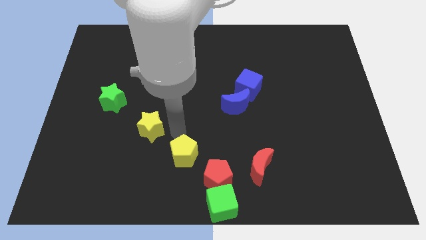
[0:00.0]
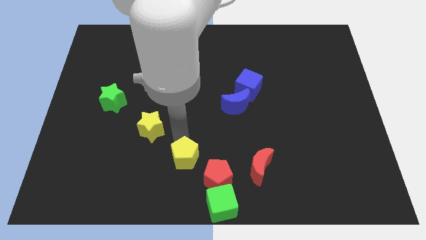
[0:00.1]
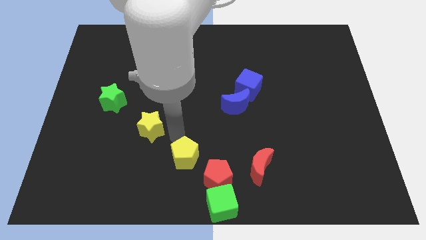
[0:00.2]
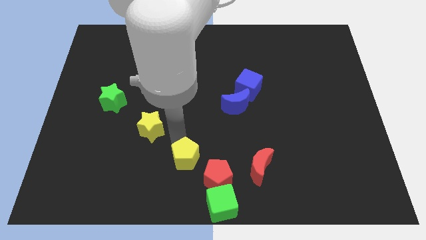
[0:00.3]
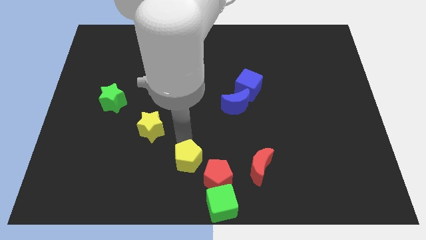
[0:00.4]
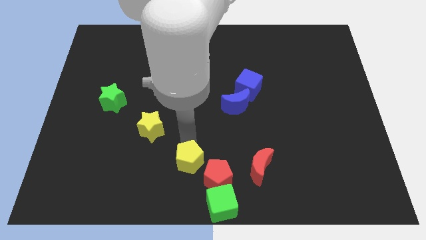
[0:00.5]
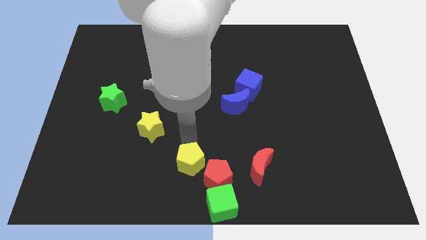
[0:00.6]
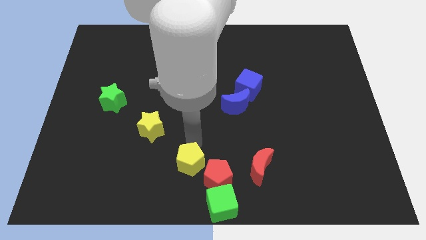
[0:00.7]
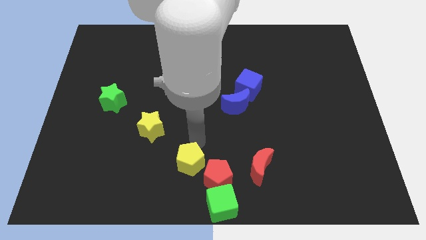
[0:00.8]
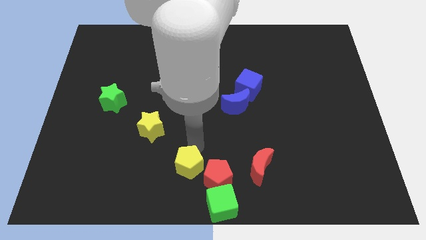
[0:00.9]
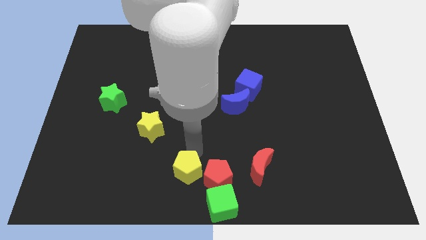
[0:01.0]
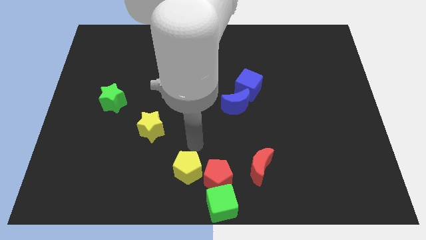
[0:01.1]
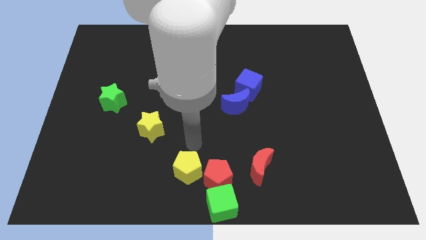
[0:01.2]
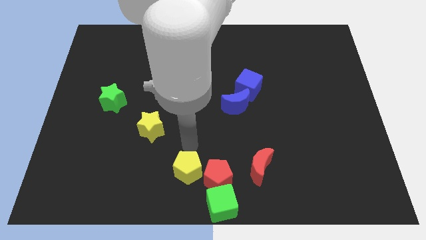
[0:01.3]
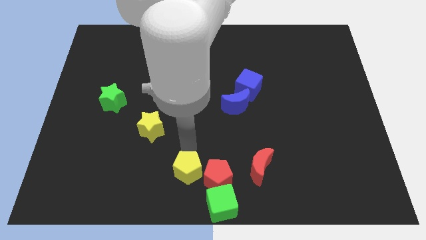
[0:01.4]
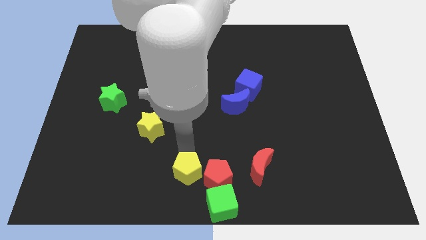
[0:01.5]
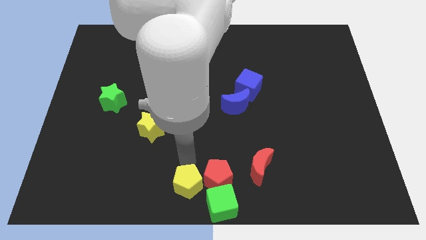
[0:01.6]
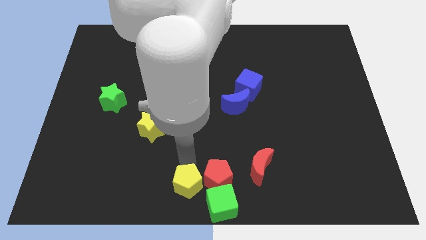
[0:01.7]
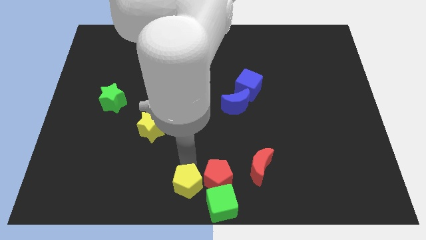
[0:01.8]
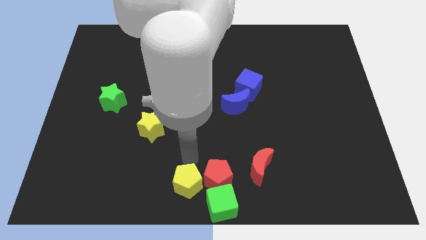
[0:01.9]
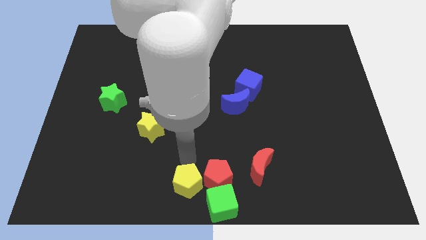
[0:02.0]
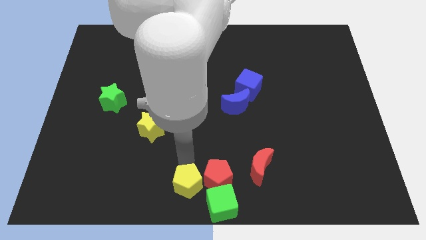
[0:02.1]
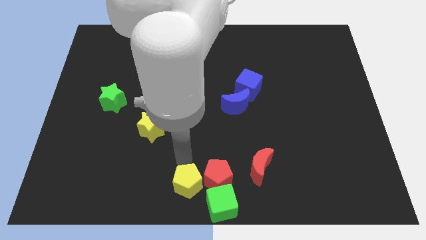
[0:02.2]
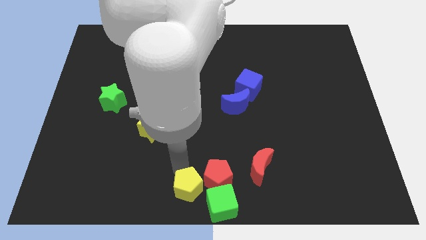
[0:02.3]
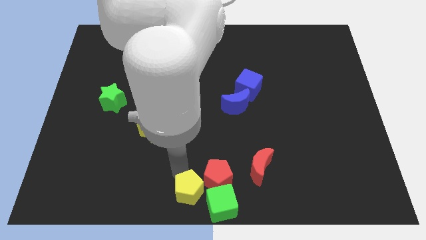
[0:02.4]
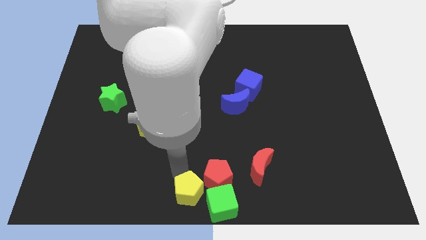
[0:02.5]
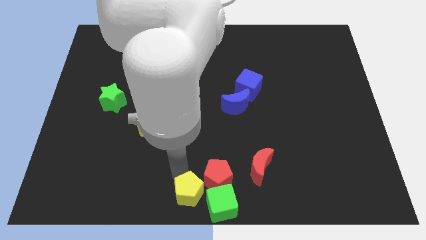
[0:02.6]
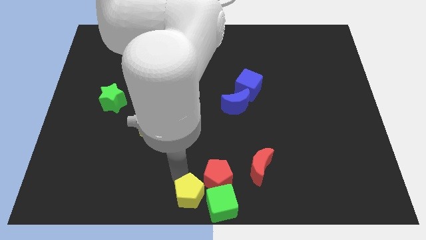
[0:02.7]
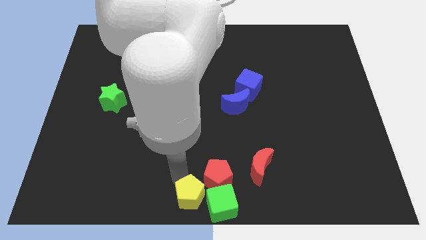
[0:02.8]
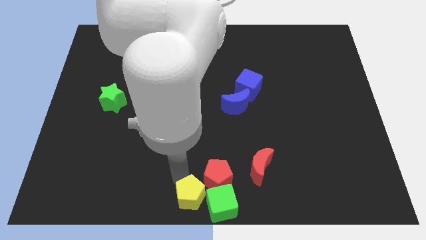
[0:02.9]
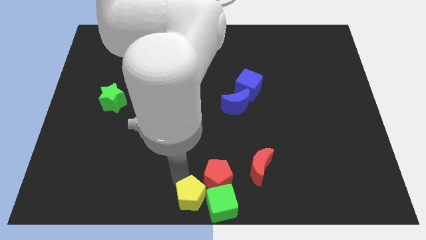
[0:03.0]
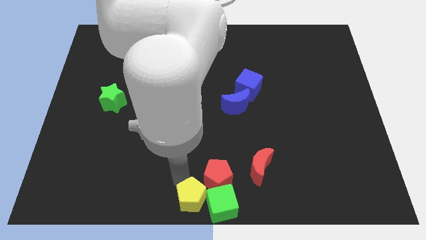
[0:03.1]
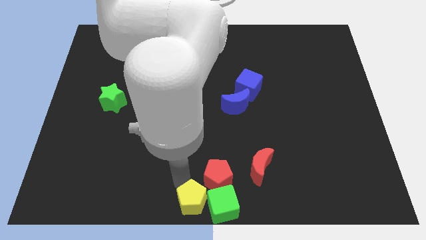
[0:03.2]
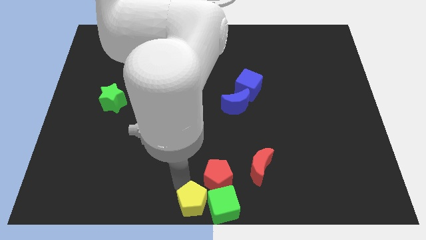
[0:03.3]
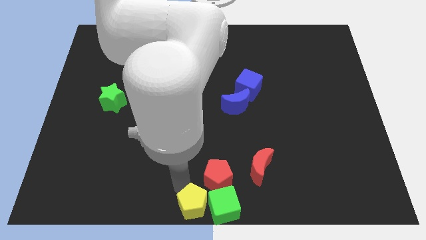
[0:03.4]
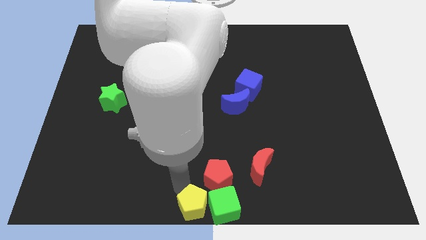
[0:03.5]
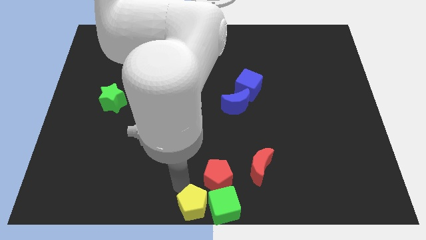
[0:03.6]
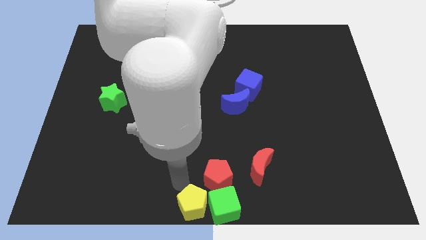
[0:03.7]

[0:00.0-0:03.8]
push the yellow pentagon to the left of the green cube

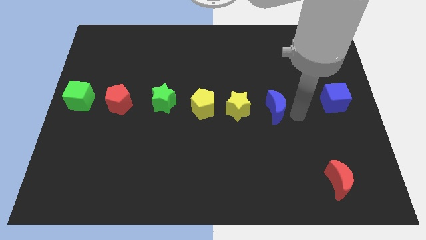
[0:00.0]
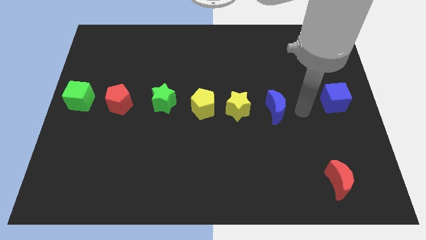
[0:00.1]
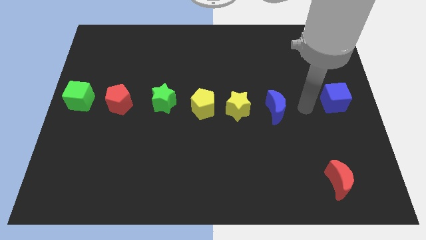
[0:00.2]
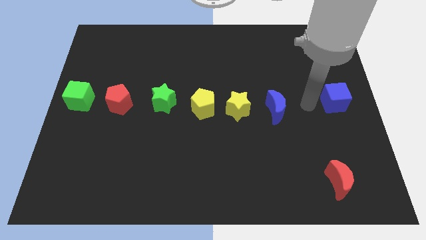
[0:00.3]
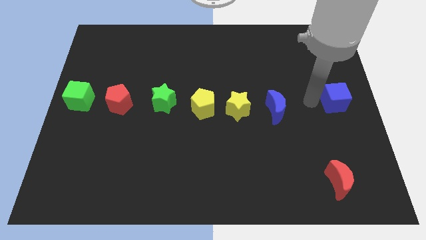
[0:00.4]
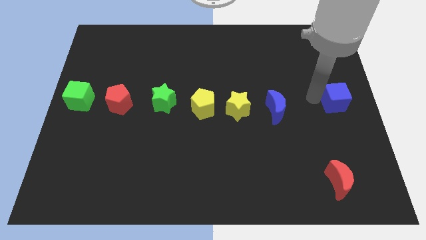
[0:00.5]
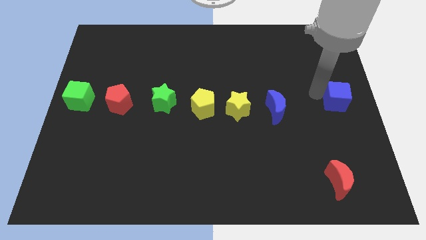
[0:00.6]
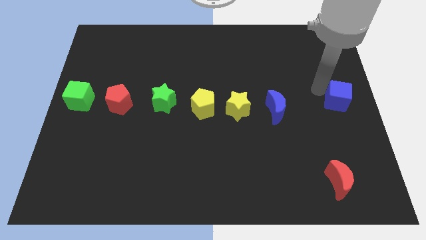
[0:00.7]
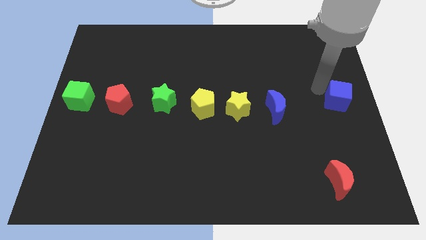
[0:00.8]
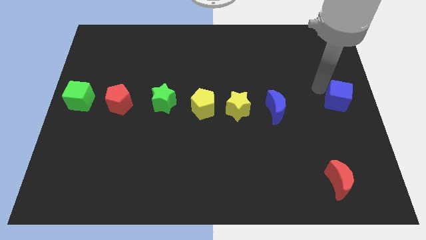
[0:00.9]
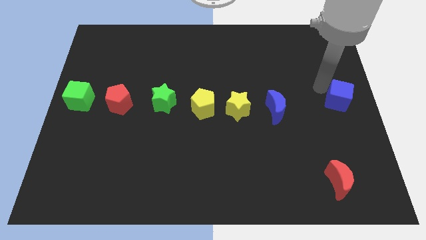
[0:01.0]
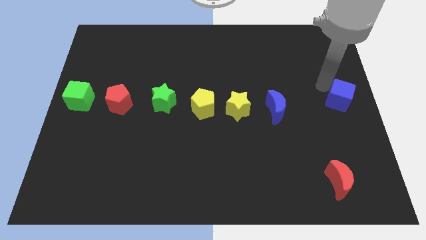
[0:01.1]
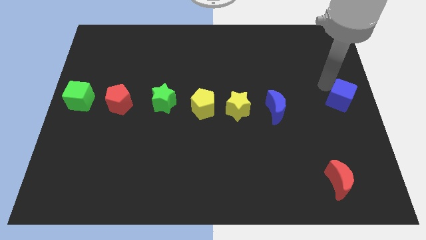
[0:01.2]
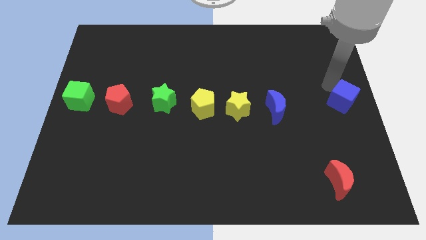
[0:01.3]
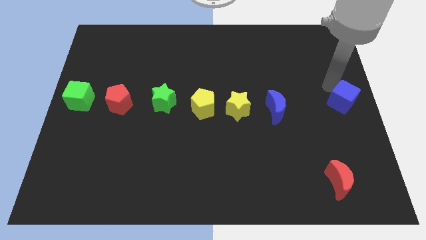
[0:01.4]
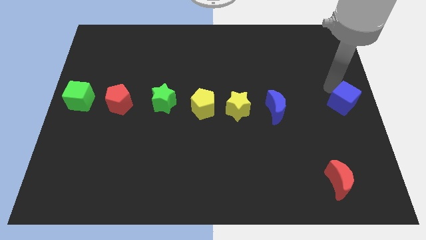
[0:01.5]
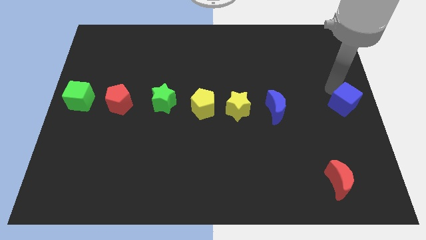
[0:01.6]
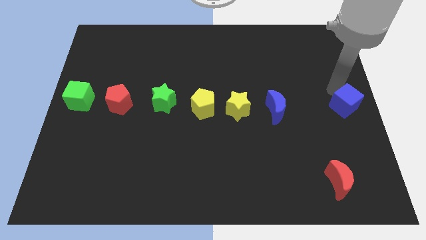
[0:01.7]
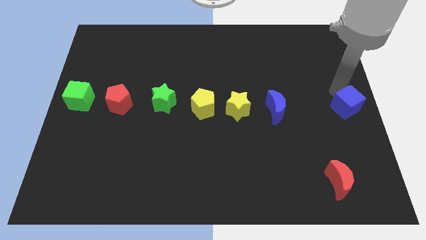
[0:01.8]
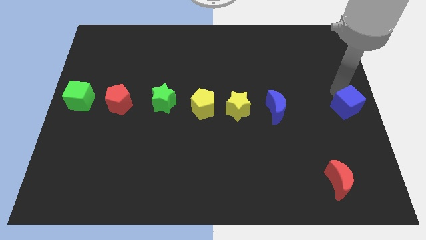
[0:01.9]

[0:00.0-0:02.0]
move the blue cube to the center right

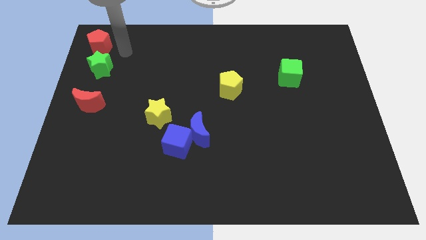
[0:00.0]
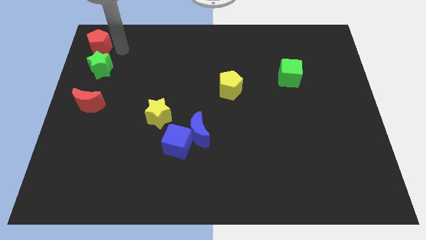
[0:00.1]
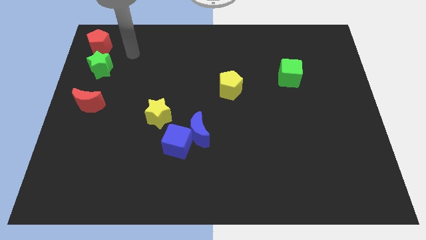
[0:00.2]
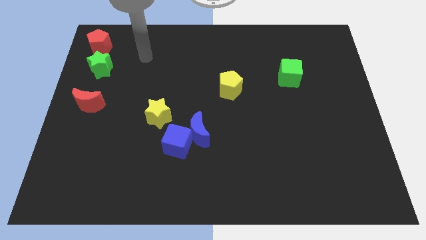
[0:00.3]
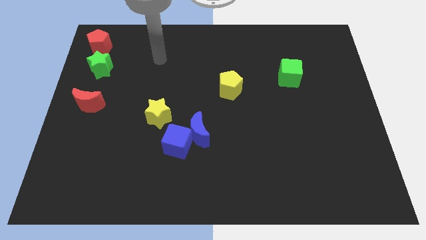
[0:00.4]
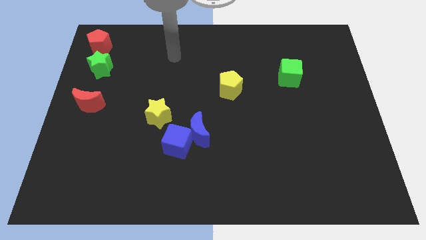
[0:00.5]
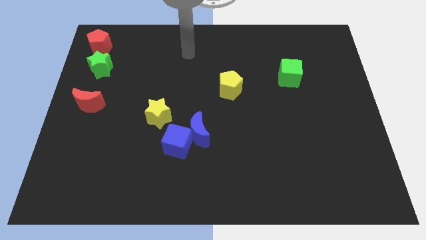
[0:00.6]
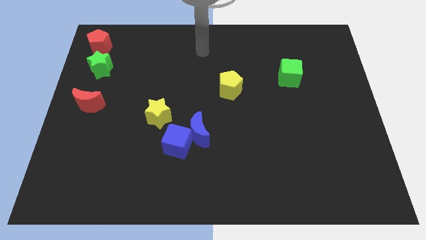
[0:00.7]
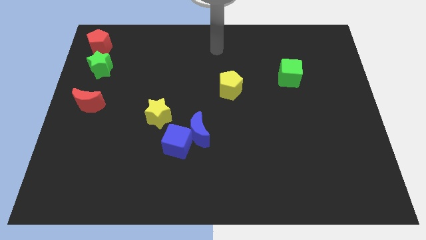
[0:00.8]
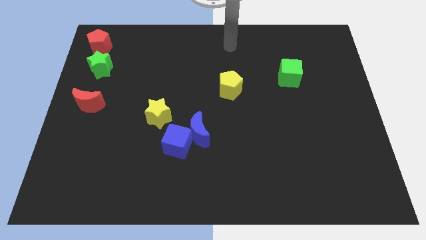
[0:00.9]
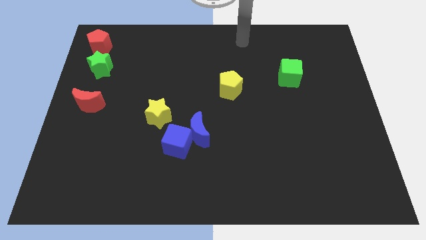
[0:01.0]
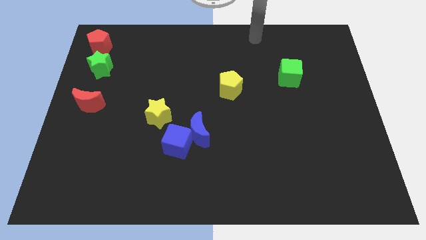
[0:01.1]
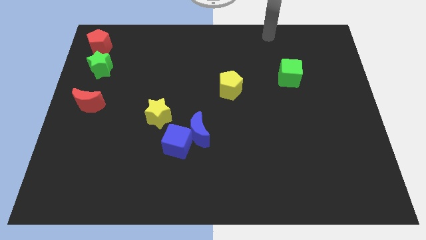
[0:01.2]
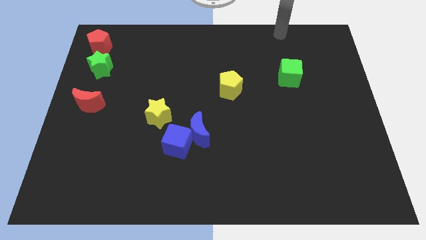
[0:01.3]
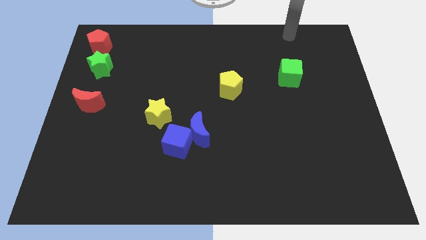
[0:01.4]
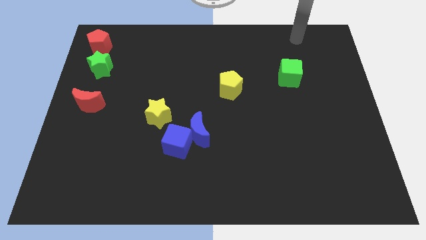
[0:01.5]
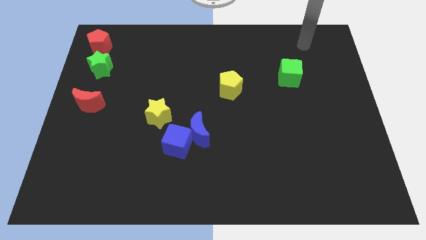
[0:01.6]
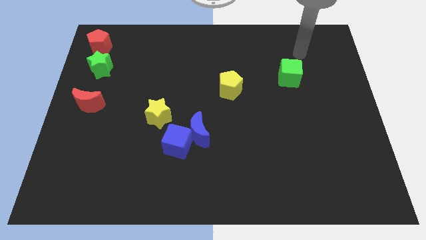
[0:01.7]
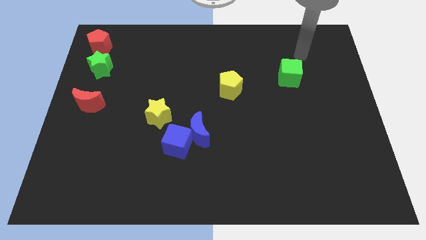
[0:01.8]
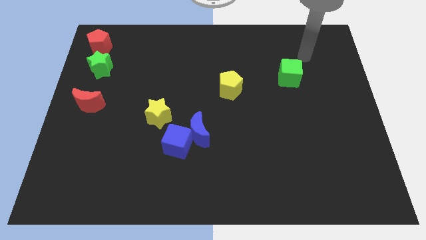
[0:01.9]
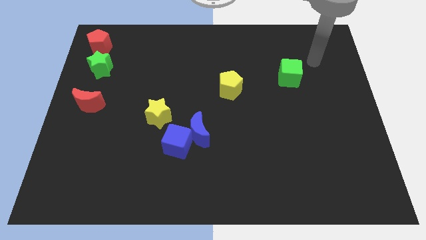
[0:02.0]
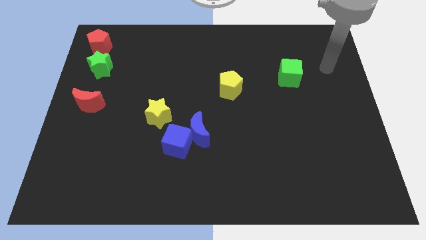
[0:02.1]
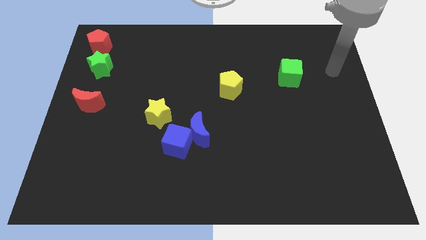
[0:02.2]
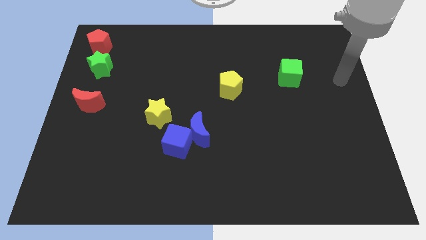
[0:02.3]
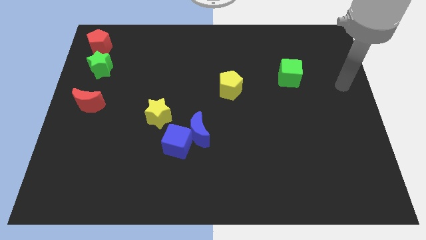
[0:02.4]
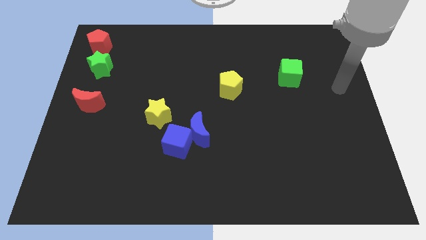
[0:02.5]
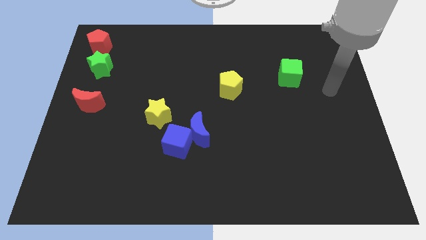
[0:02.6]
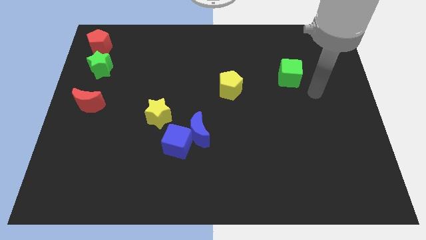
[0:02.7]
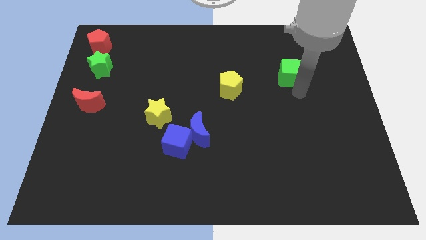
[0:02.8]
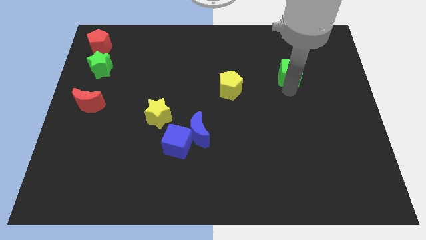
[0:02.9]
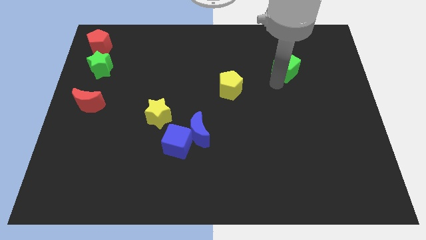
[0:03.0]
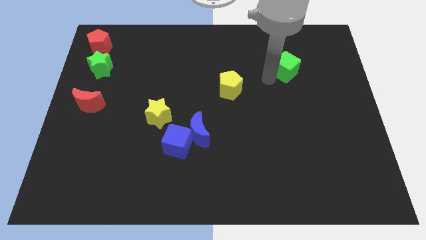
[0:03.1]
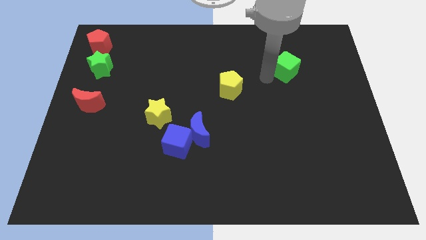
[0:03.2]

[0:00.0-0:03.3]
move your hand away from the red pentagon
